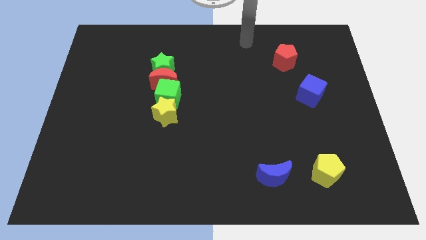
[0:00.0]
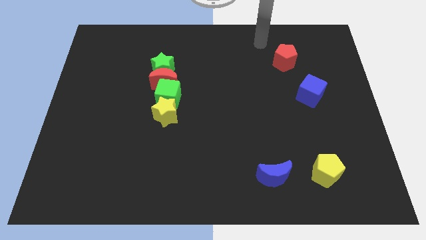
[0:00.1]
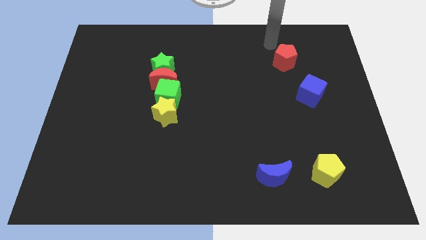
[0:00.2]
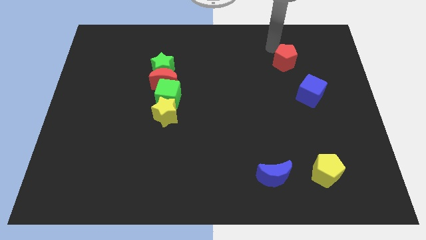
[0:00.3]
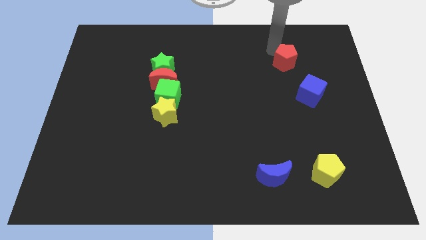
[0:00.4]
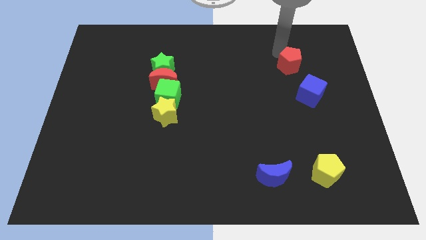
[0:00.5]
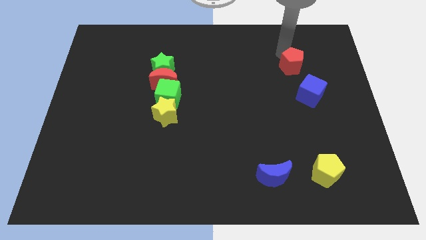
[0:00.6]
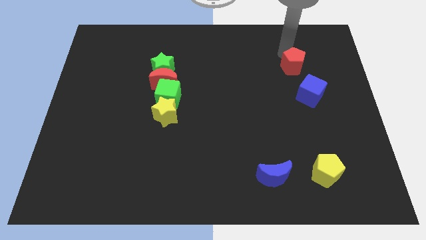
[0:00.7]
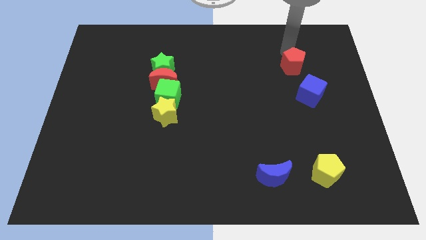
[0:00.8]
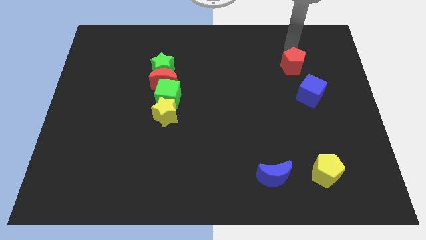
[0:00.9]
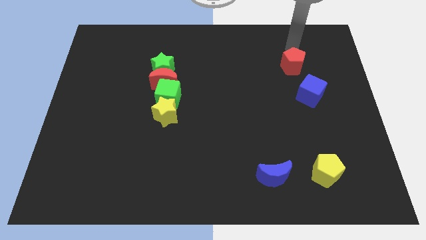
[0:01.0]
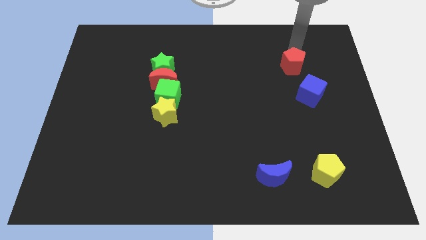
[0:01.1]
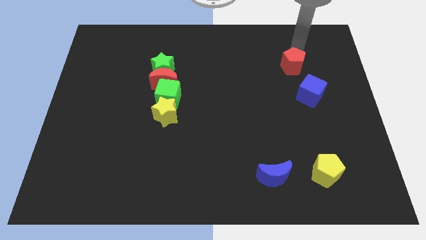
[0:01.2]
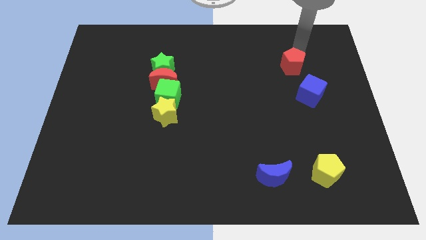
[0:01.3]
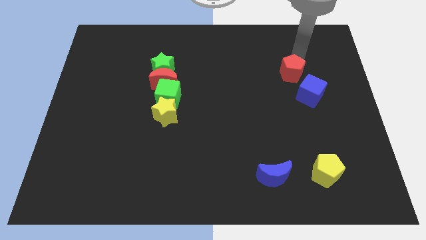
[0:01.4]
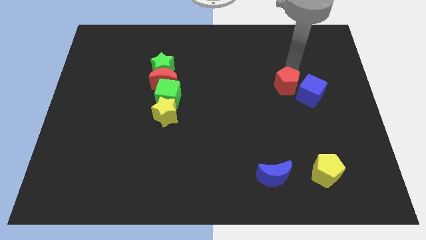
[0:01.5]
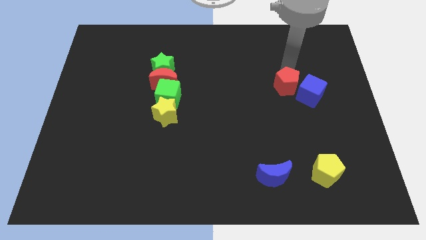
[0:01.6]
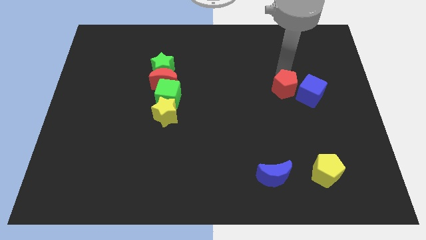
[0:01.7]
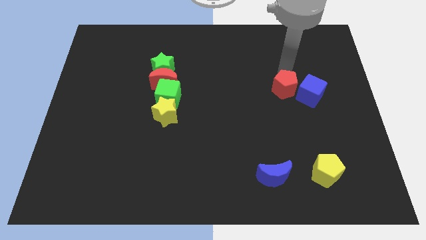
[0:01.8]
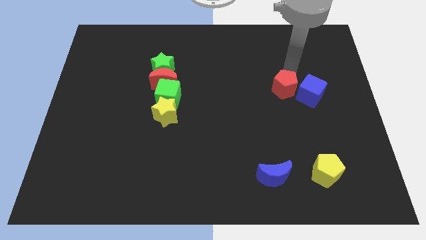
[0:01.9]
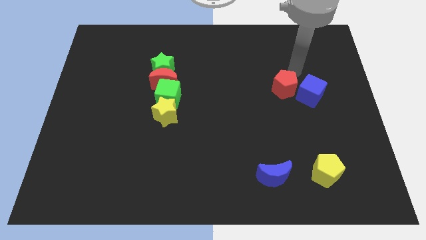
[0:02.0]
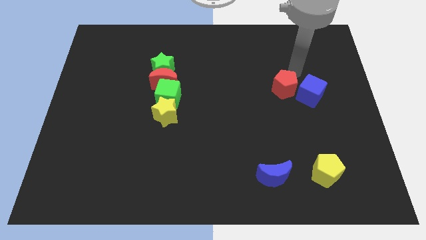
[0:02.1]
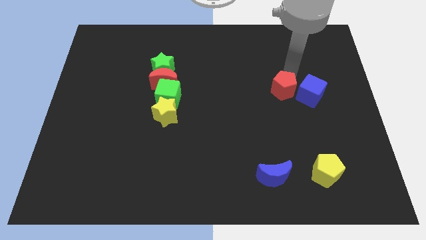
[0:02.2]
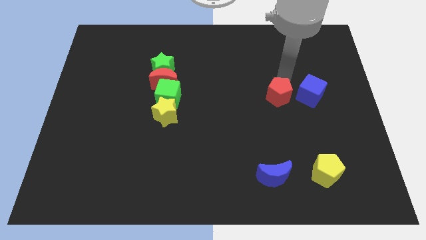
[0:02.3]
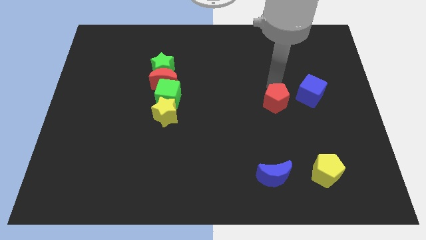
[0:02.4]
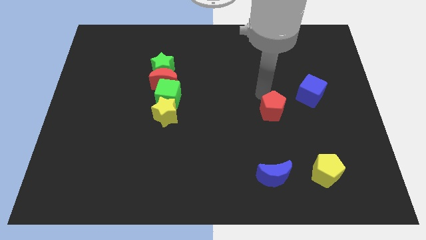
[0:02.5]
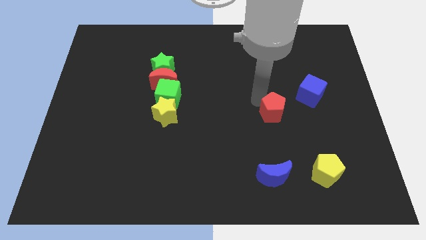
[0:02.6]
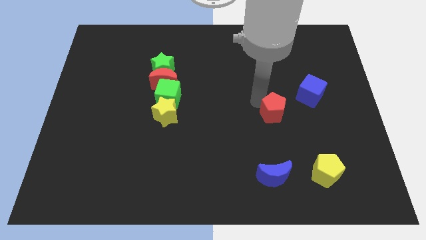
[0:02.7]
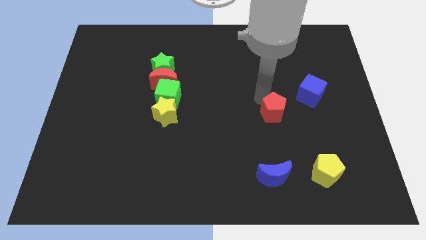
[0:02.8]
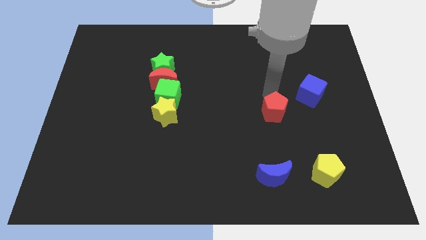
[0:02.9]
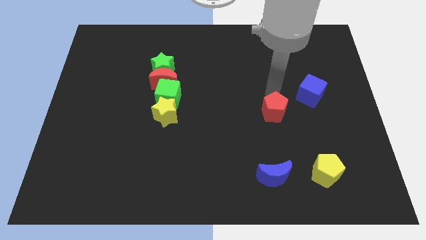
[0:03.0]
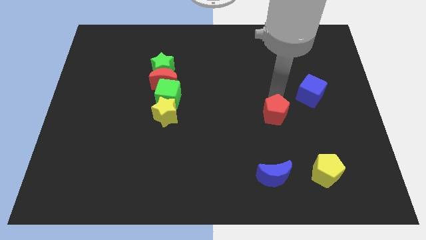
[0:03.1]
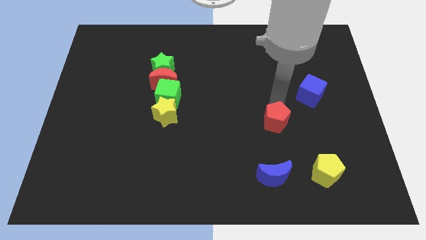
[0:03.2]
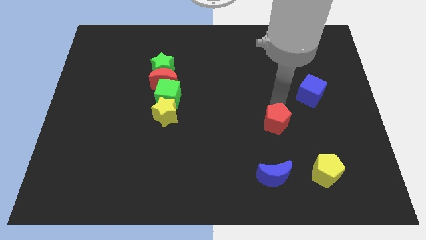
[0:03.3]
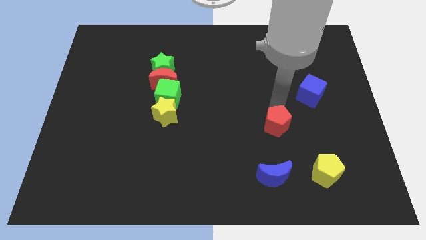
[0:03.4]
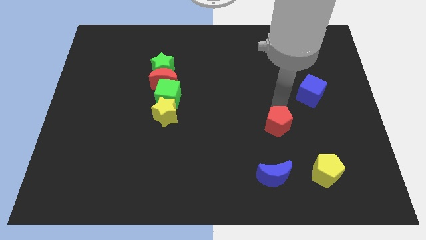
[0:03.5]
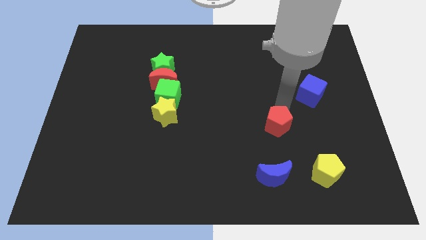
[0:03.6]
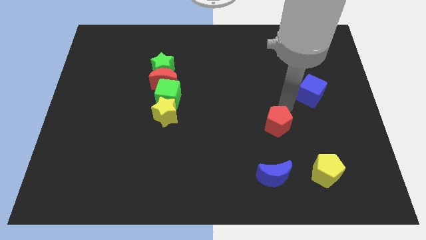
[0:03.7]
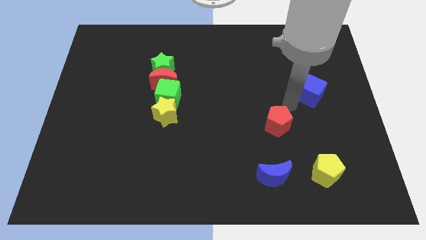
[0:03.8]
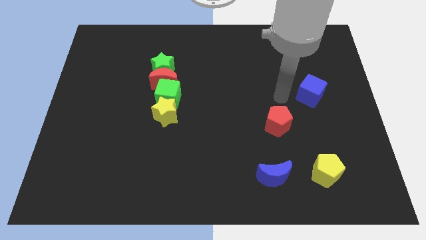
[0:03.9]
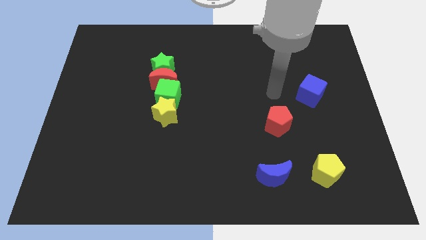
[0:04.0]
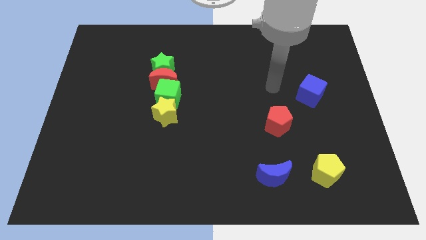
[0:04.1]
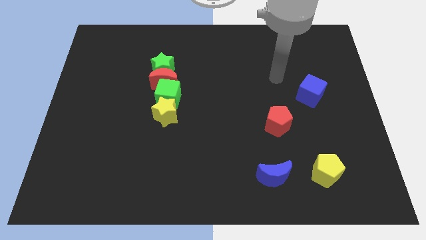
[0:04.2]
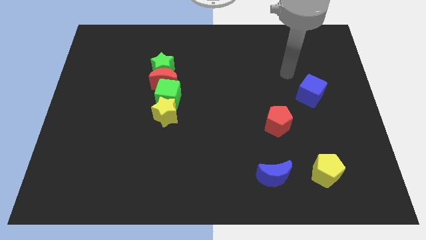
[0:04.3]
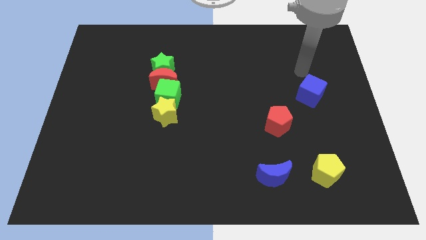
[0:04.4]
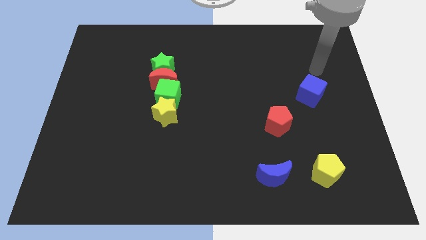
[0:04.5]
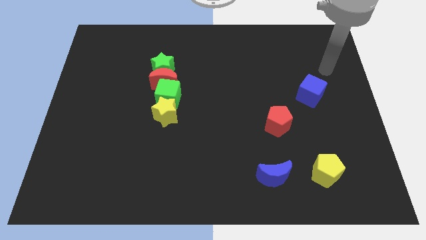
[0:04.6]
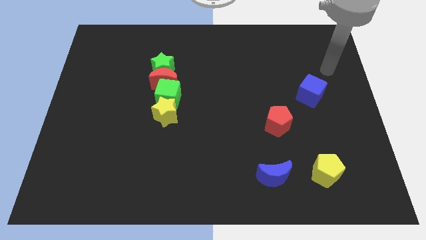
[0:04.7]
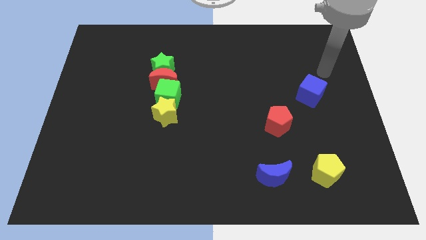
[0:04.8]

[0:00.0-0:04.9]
move the red pentagon towards the blue crescent

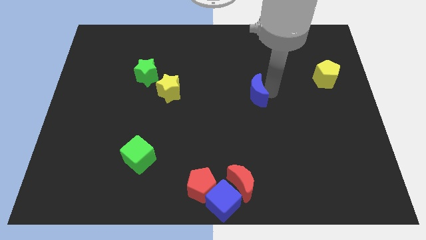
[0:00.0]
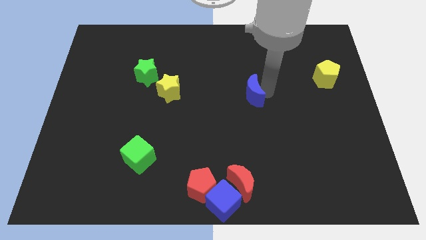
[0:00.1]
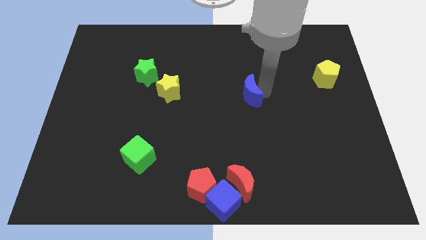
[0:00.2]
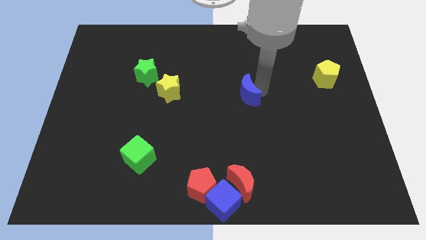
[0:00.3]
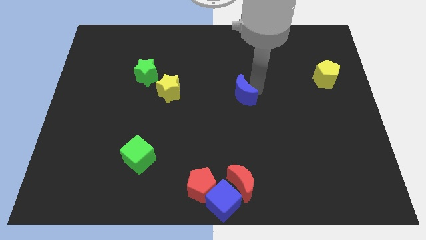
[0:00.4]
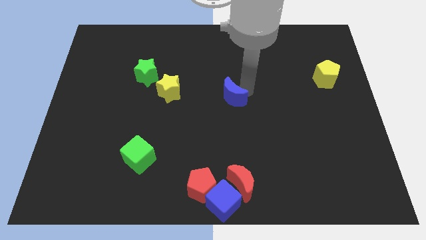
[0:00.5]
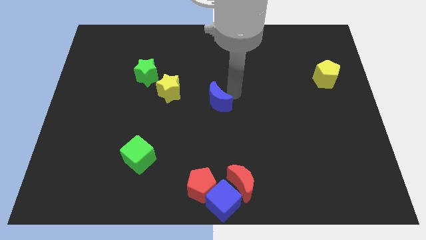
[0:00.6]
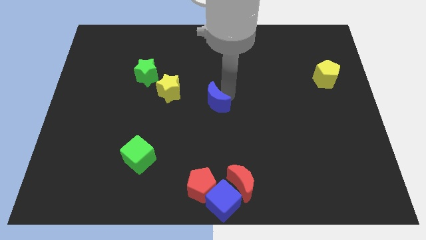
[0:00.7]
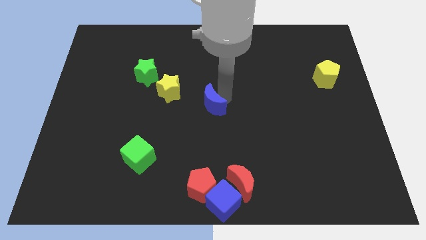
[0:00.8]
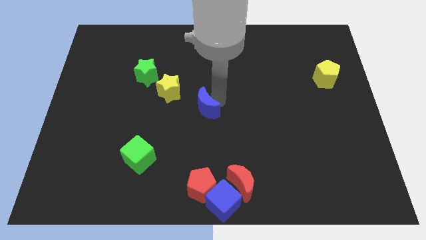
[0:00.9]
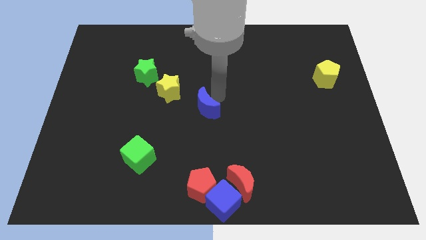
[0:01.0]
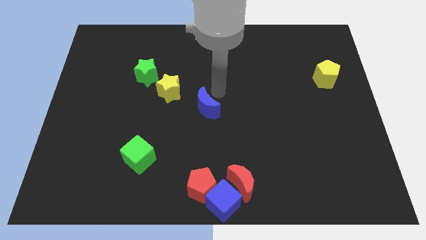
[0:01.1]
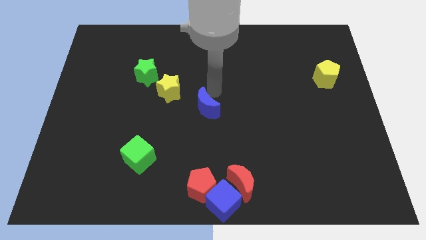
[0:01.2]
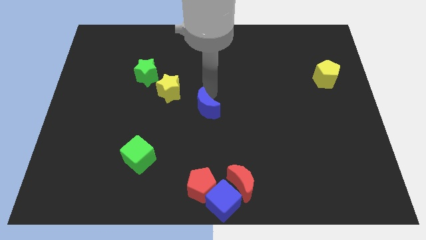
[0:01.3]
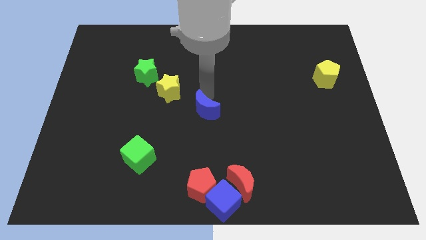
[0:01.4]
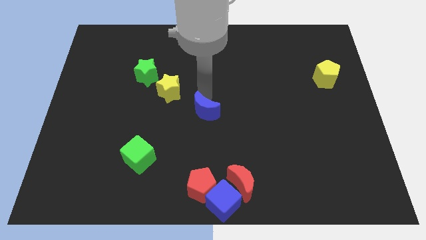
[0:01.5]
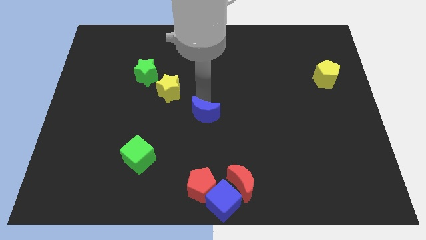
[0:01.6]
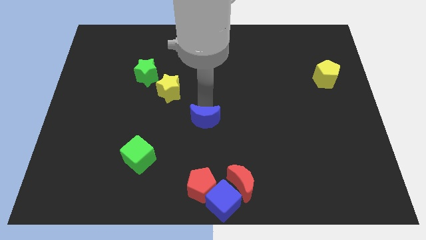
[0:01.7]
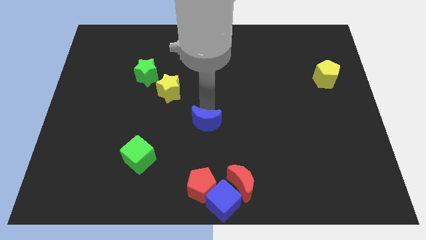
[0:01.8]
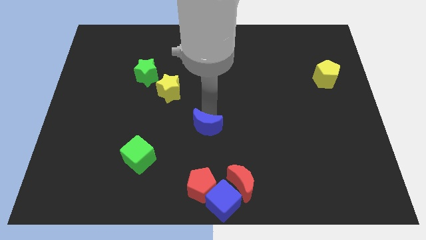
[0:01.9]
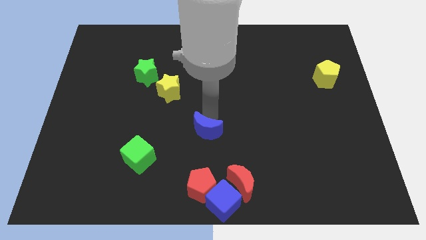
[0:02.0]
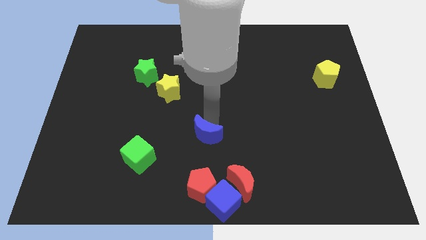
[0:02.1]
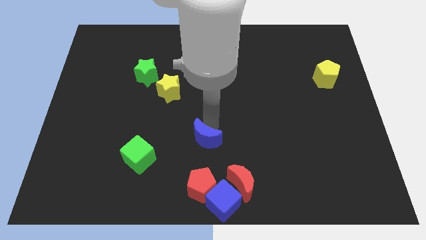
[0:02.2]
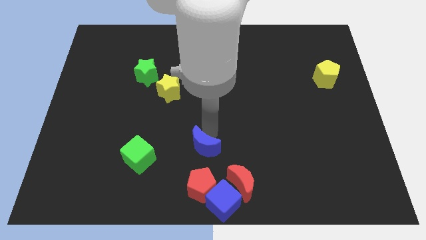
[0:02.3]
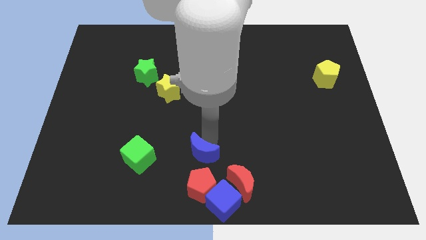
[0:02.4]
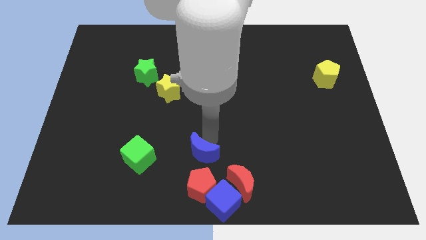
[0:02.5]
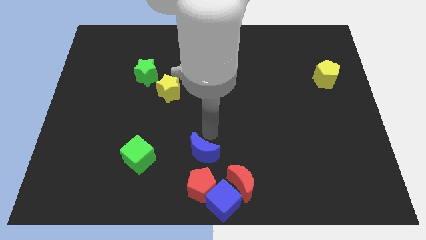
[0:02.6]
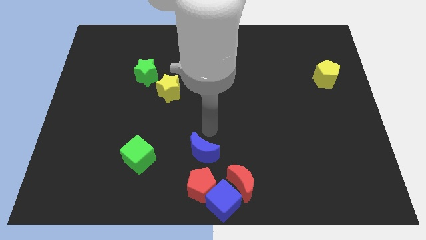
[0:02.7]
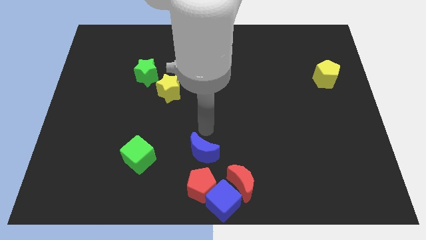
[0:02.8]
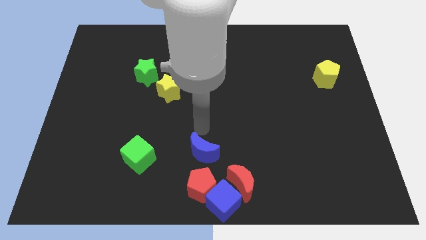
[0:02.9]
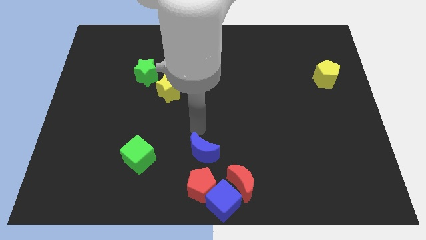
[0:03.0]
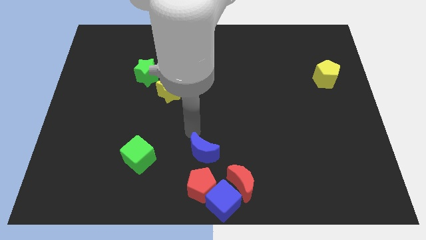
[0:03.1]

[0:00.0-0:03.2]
place the blue crescent to the top of the red pentagon

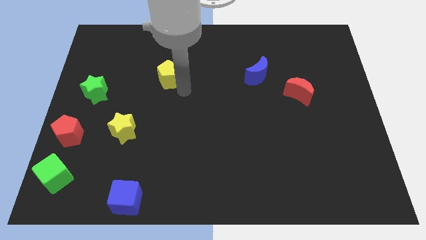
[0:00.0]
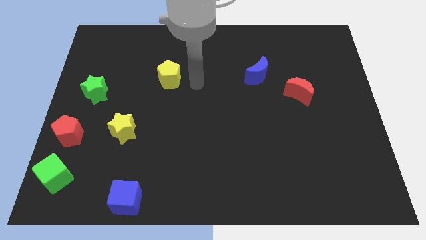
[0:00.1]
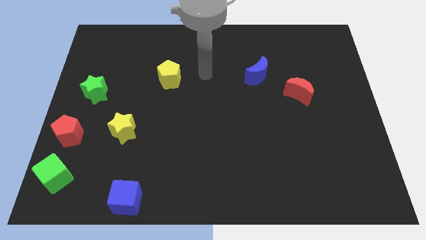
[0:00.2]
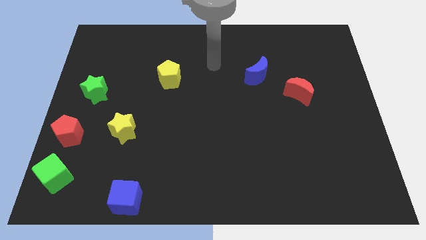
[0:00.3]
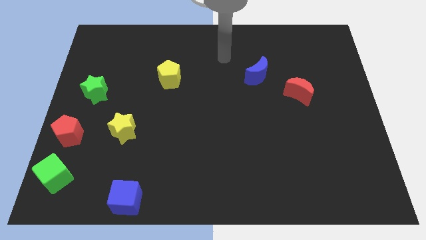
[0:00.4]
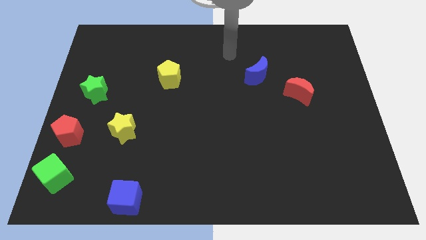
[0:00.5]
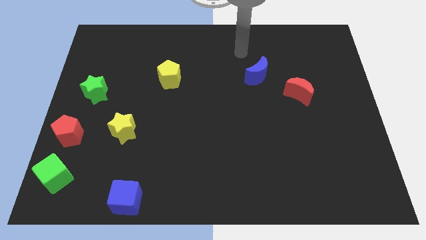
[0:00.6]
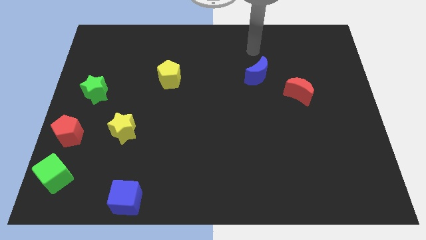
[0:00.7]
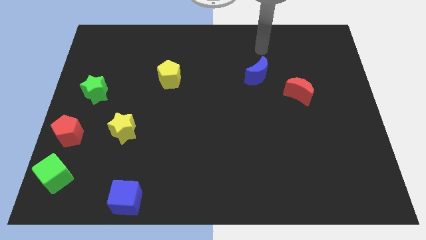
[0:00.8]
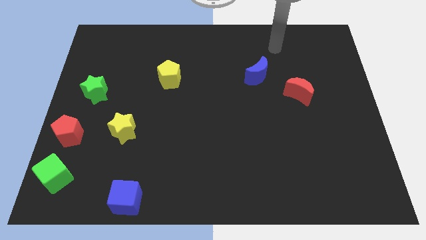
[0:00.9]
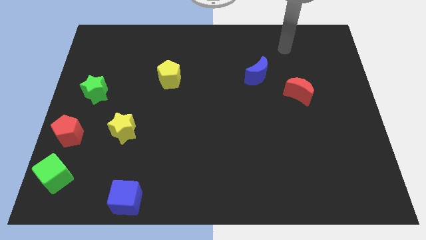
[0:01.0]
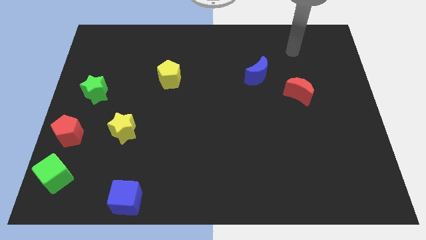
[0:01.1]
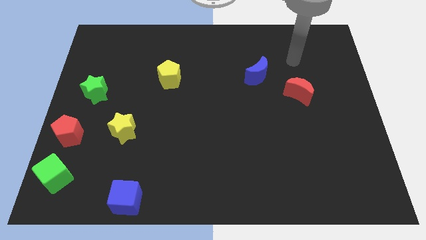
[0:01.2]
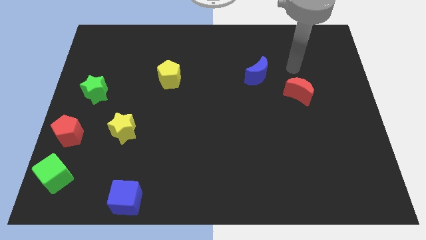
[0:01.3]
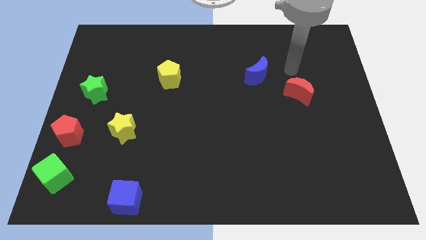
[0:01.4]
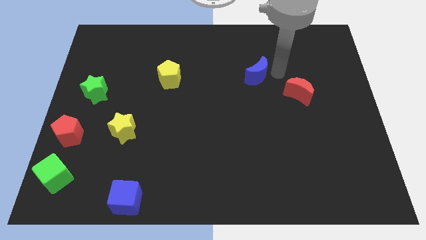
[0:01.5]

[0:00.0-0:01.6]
point your arm at the right of the blue crescent
